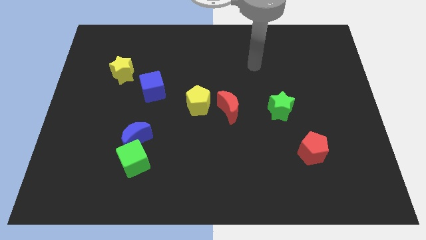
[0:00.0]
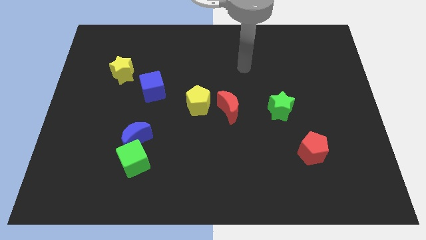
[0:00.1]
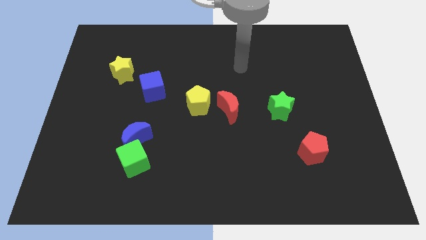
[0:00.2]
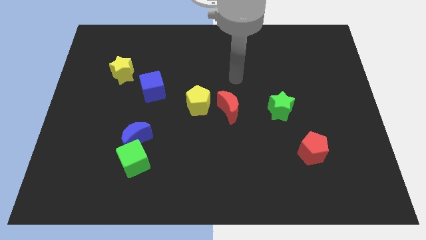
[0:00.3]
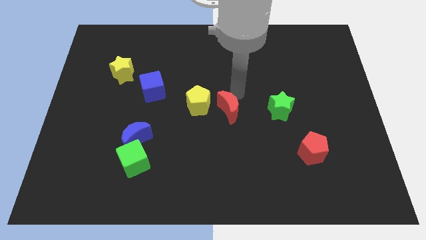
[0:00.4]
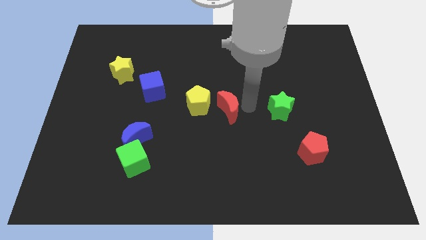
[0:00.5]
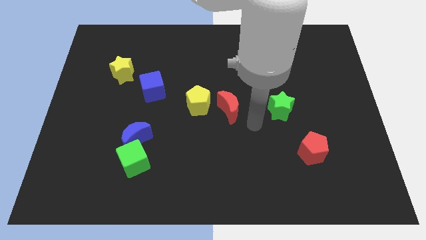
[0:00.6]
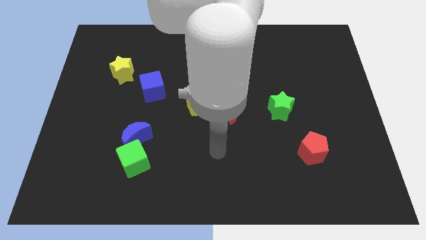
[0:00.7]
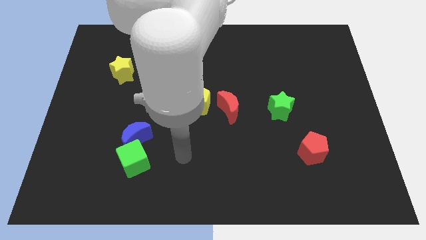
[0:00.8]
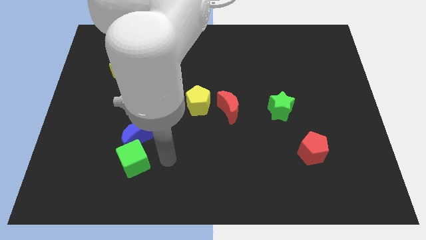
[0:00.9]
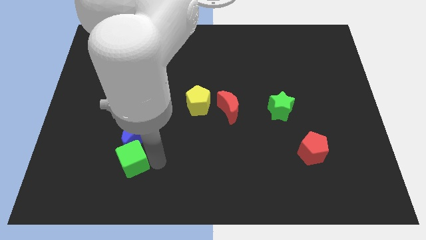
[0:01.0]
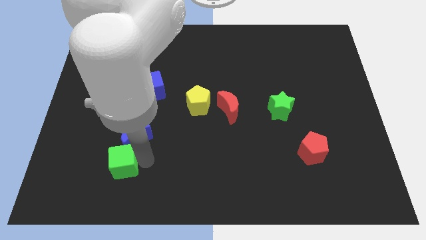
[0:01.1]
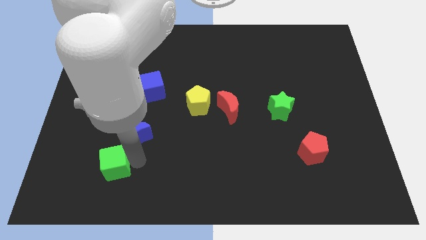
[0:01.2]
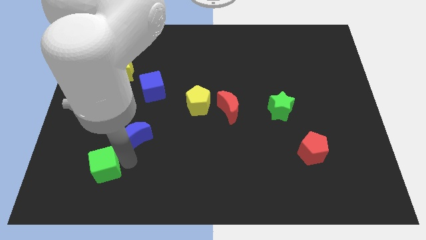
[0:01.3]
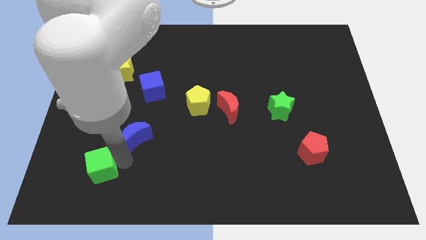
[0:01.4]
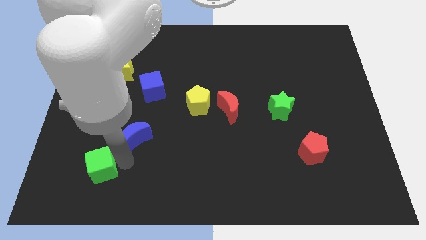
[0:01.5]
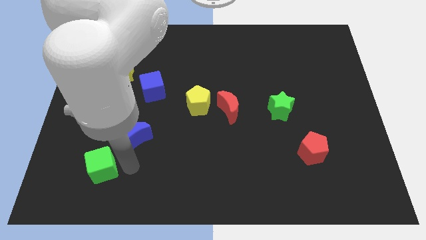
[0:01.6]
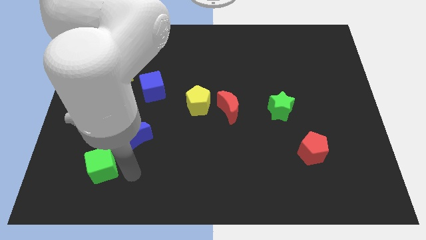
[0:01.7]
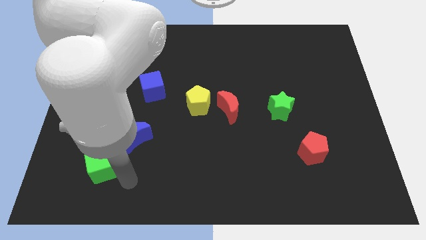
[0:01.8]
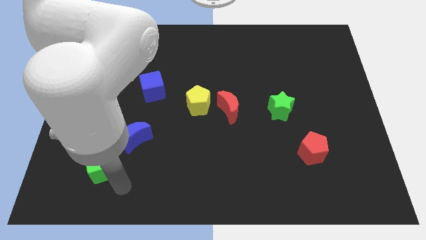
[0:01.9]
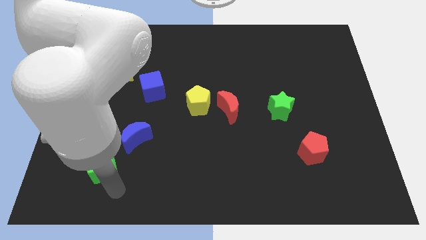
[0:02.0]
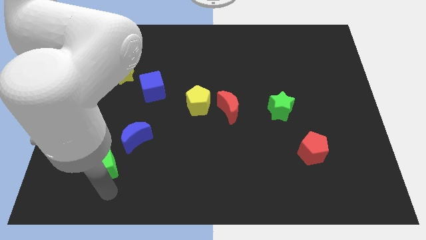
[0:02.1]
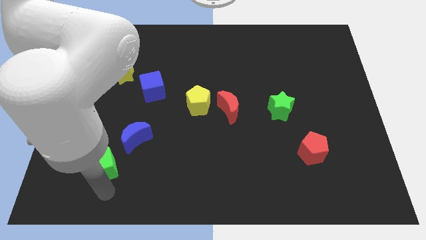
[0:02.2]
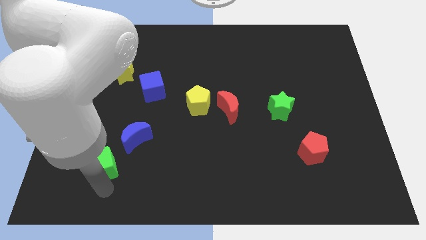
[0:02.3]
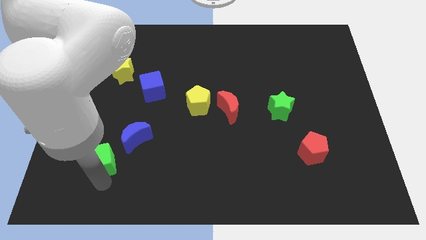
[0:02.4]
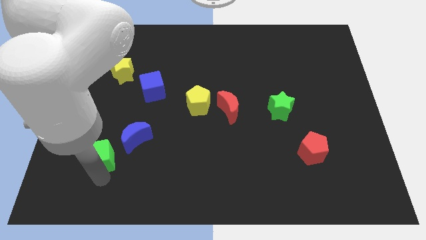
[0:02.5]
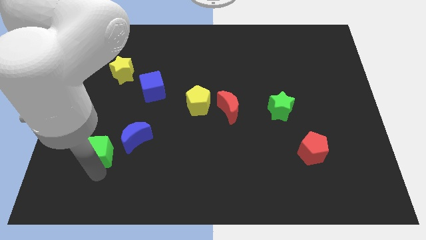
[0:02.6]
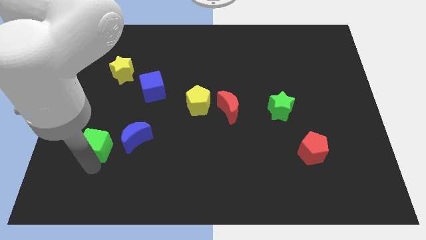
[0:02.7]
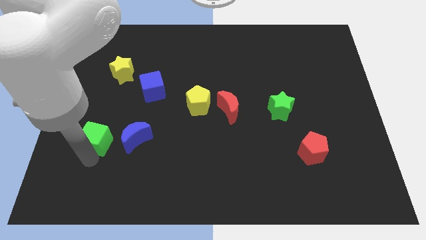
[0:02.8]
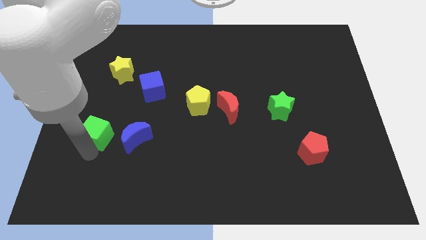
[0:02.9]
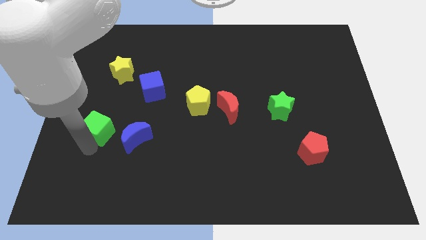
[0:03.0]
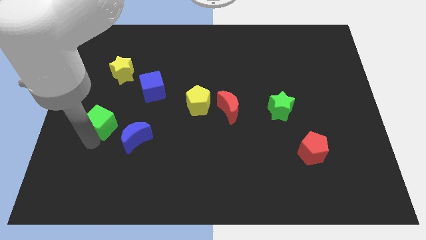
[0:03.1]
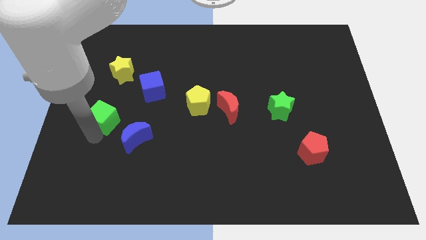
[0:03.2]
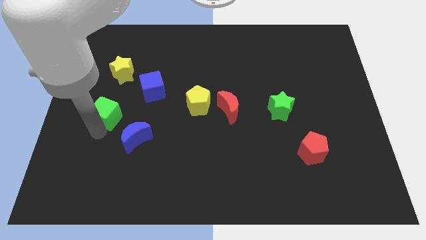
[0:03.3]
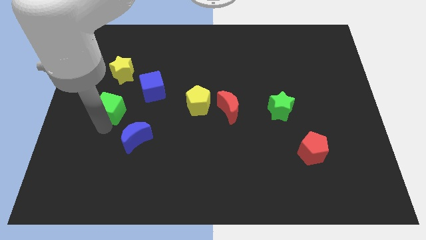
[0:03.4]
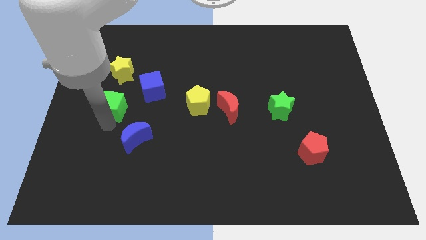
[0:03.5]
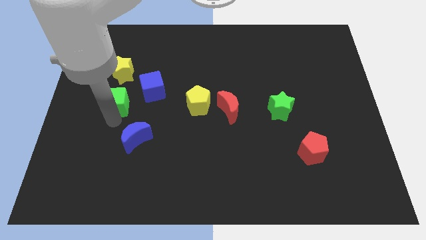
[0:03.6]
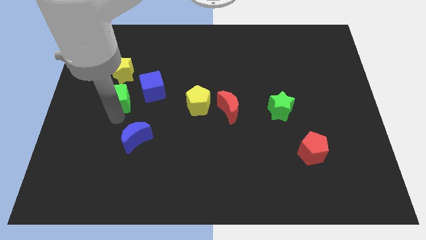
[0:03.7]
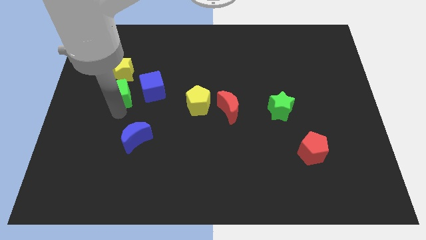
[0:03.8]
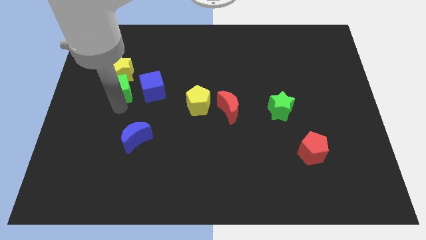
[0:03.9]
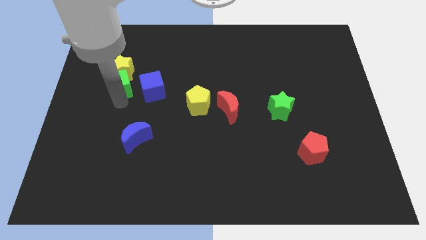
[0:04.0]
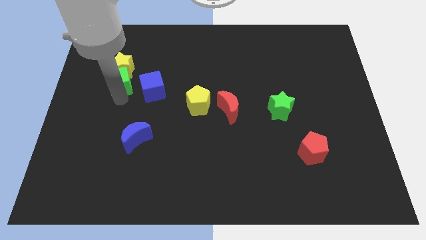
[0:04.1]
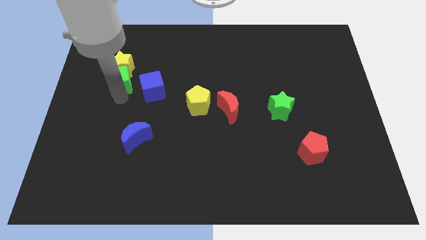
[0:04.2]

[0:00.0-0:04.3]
move the green cube to the yellow star

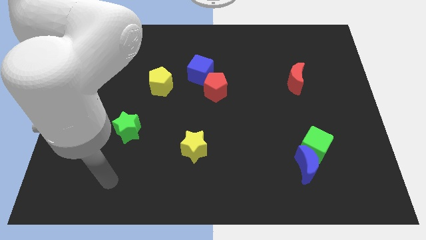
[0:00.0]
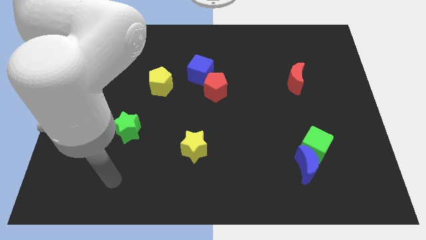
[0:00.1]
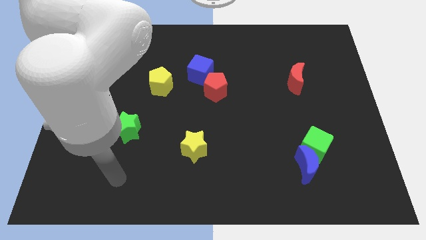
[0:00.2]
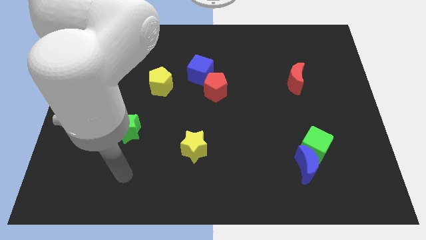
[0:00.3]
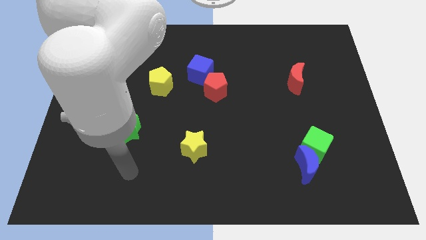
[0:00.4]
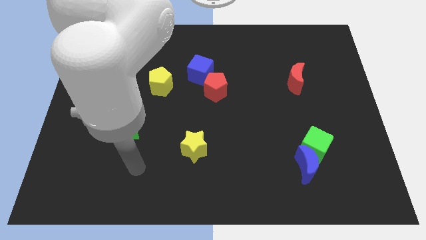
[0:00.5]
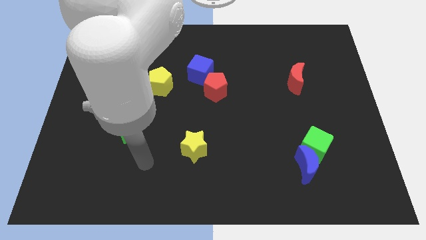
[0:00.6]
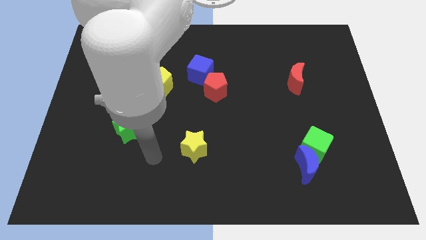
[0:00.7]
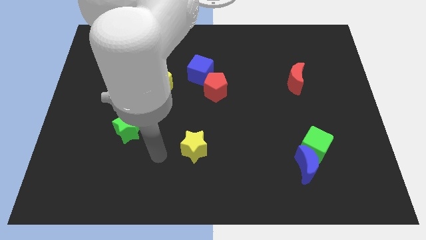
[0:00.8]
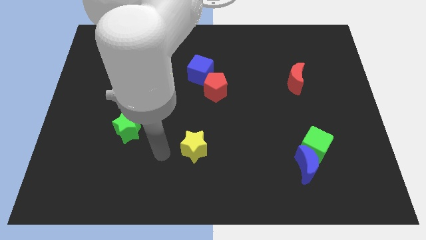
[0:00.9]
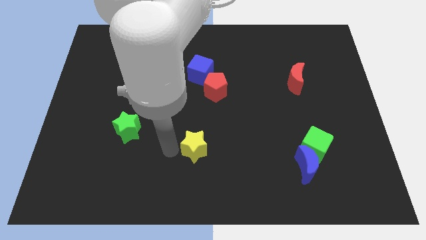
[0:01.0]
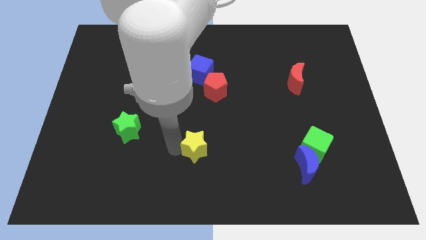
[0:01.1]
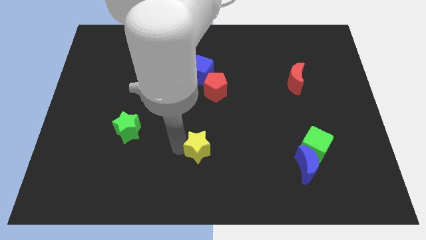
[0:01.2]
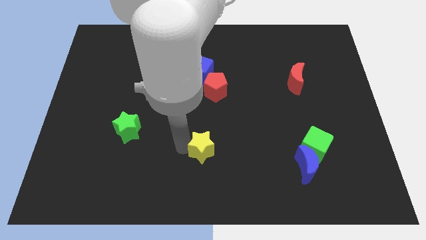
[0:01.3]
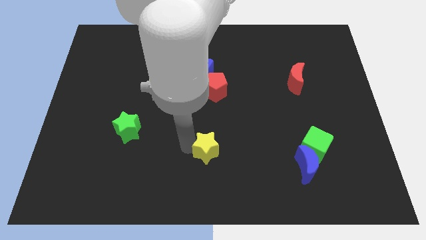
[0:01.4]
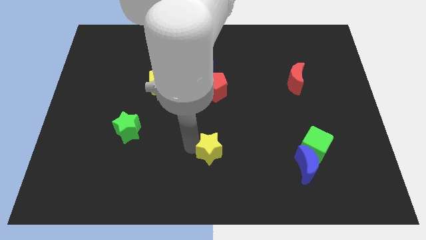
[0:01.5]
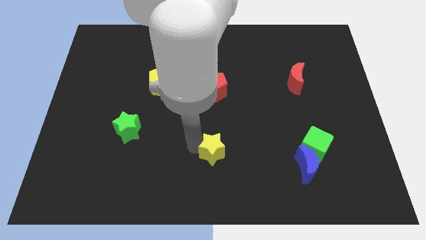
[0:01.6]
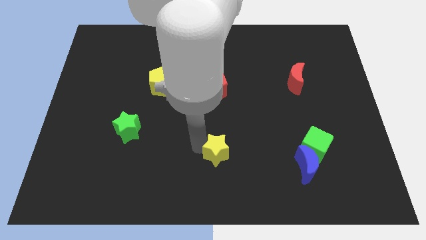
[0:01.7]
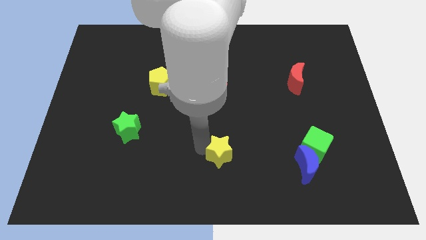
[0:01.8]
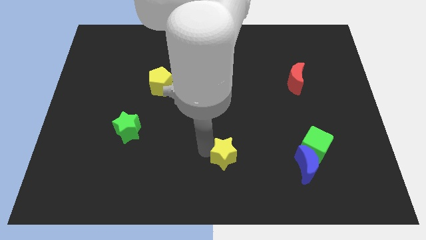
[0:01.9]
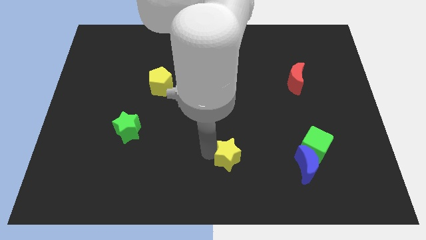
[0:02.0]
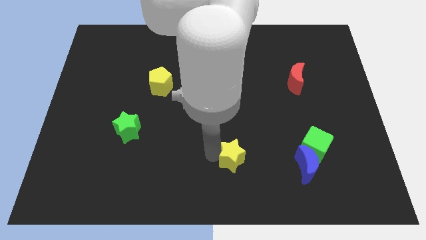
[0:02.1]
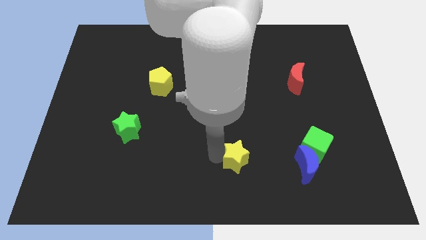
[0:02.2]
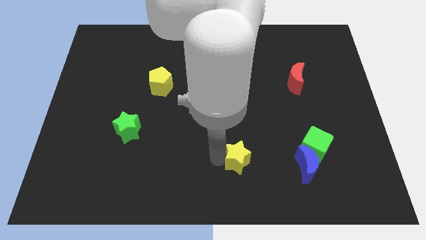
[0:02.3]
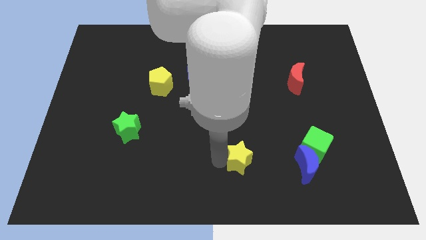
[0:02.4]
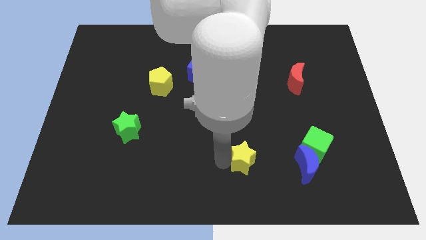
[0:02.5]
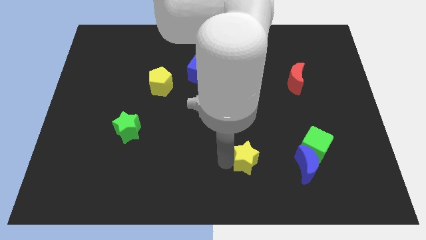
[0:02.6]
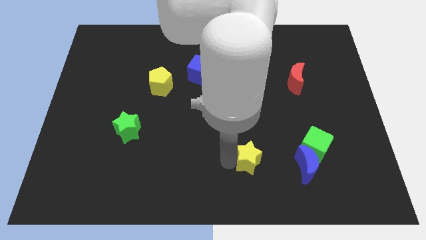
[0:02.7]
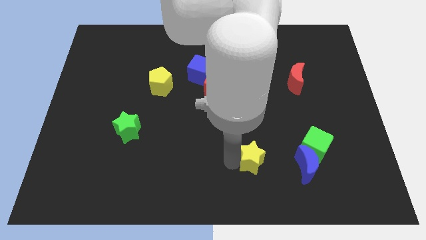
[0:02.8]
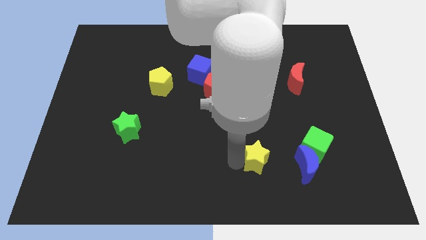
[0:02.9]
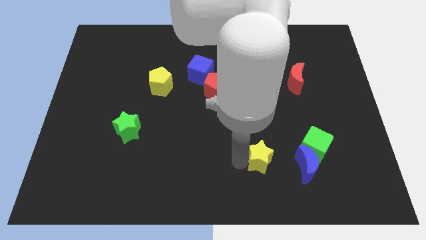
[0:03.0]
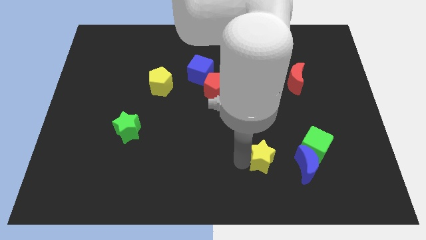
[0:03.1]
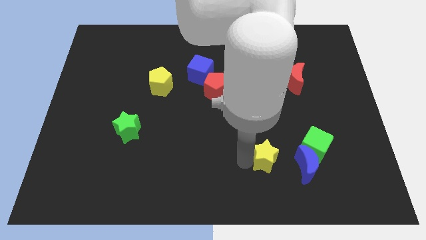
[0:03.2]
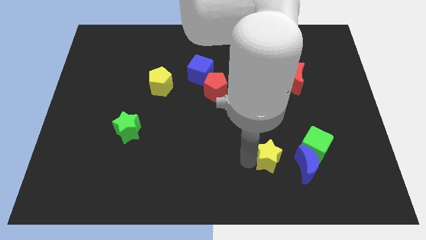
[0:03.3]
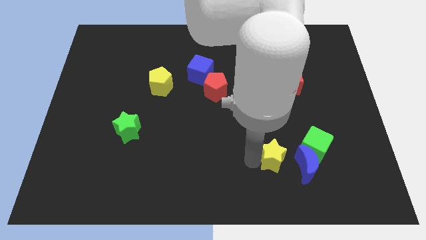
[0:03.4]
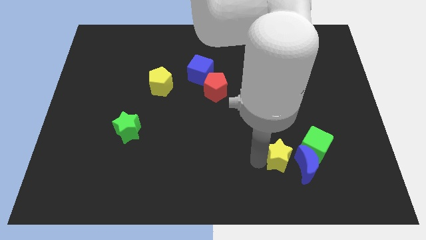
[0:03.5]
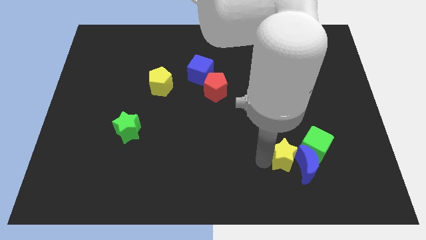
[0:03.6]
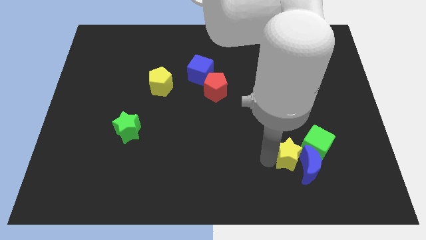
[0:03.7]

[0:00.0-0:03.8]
push the yellow star towards the blue moon

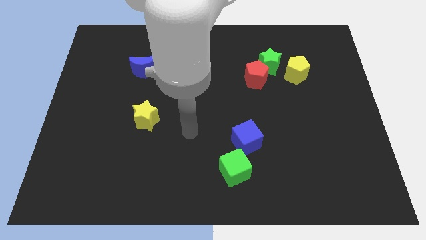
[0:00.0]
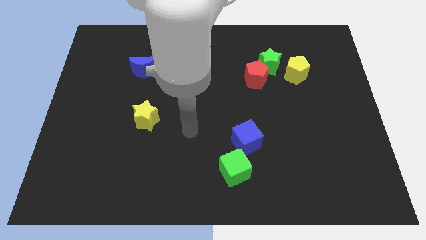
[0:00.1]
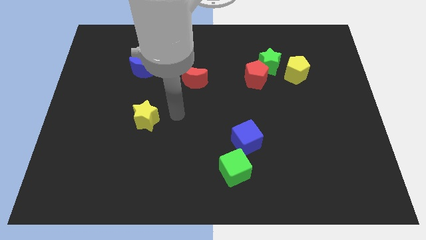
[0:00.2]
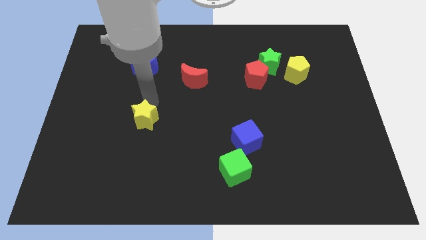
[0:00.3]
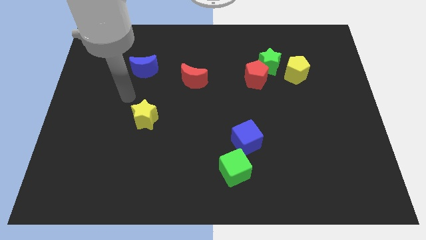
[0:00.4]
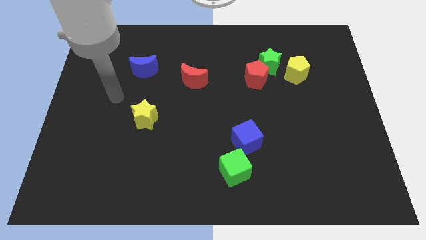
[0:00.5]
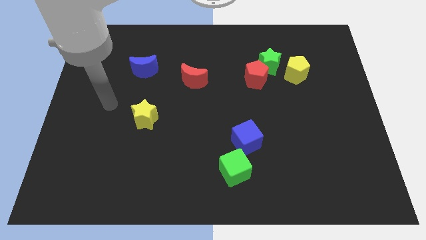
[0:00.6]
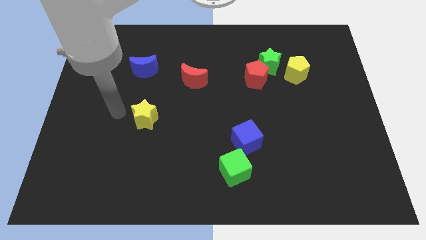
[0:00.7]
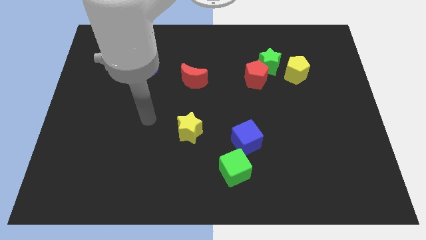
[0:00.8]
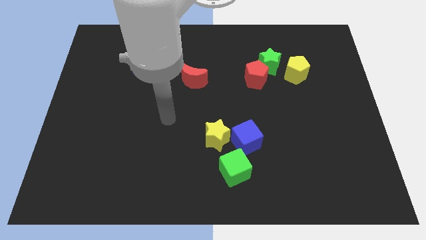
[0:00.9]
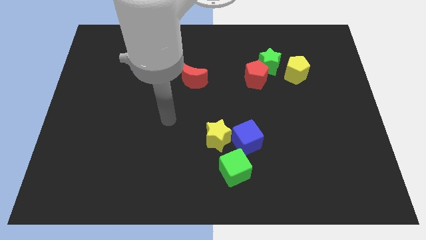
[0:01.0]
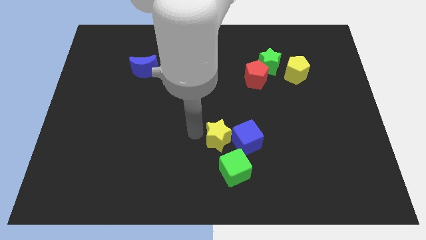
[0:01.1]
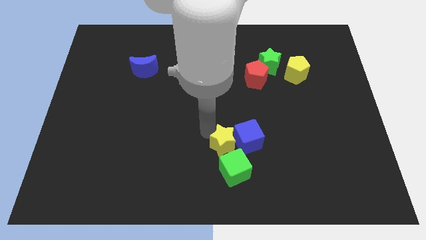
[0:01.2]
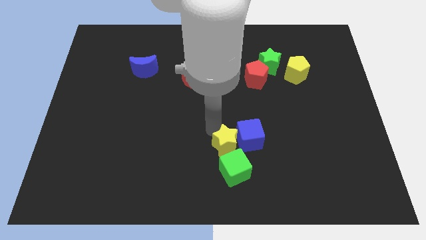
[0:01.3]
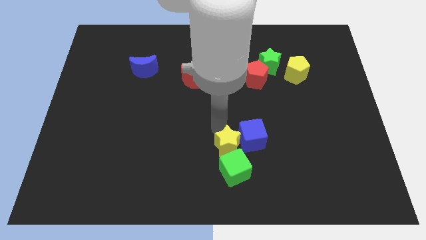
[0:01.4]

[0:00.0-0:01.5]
push the yellow star next to the blue cube
